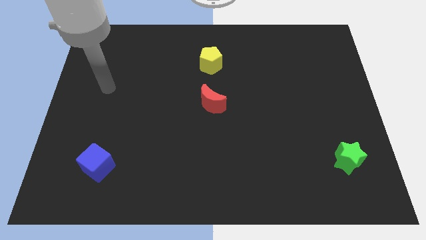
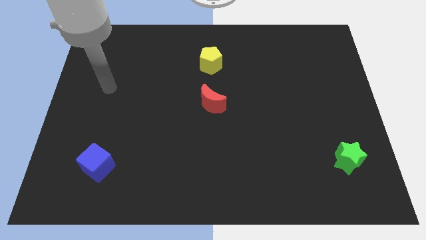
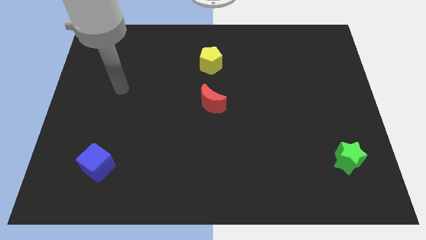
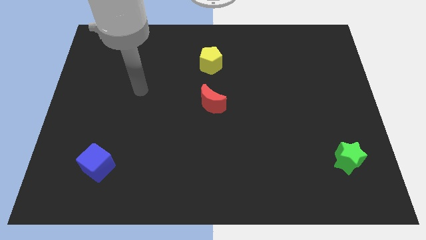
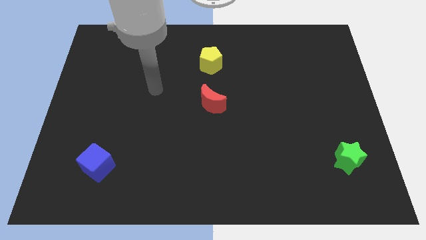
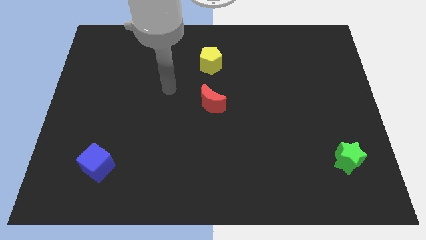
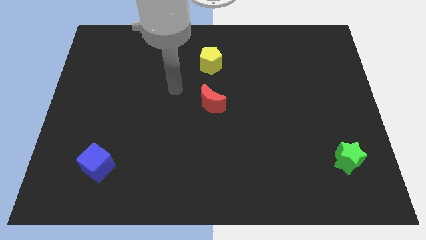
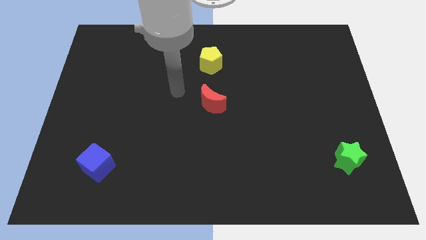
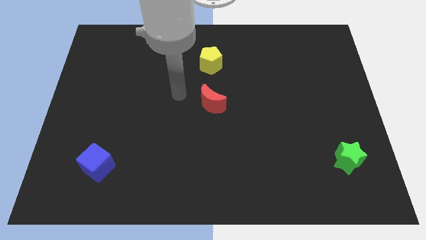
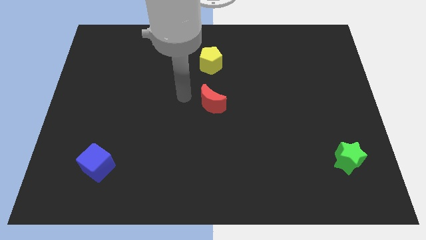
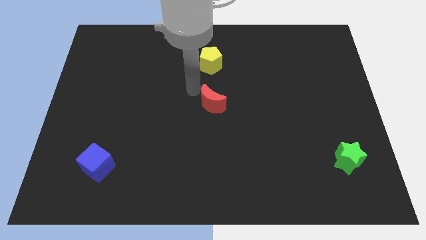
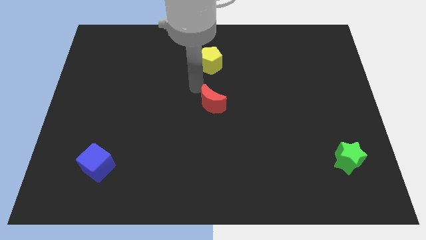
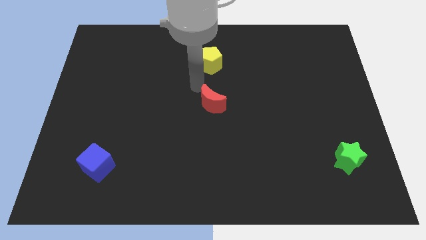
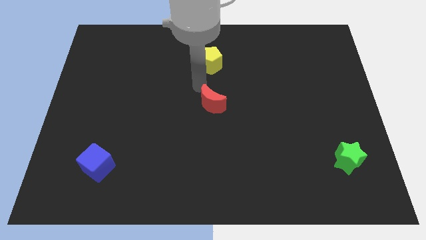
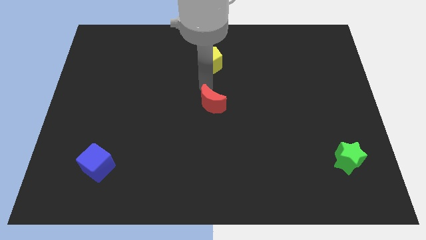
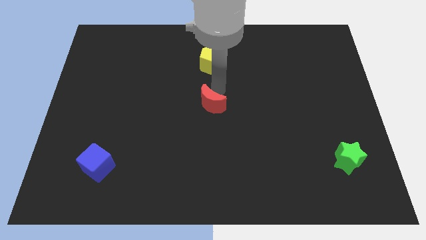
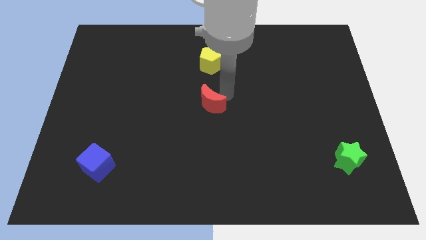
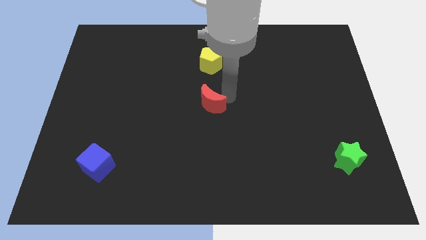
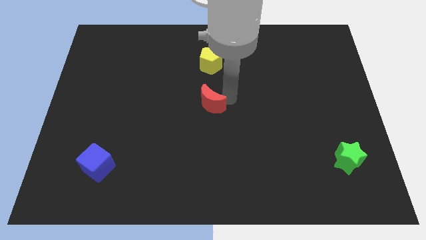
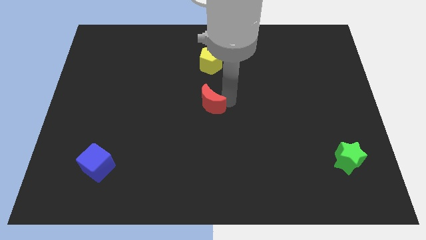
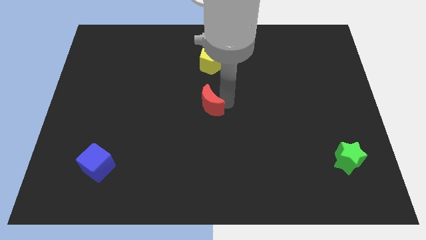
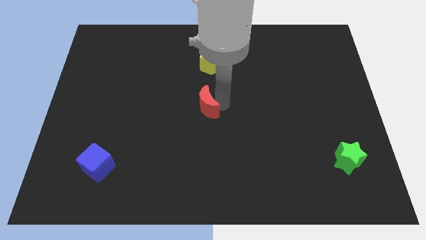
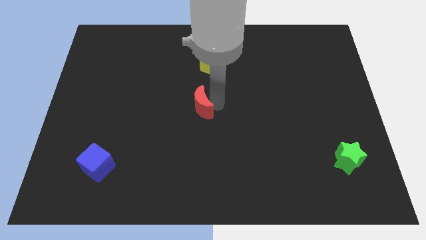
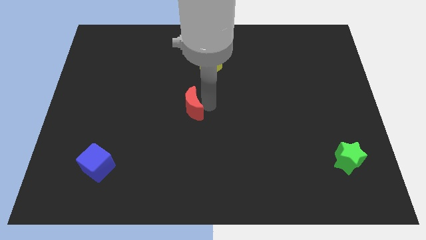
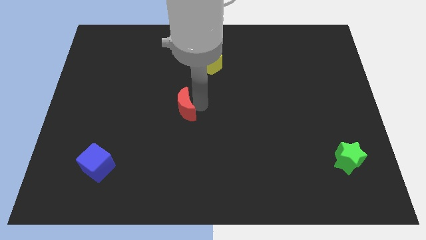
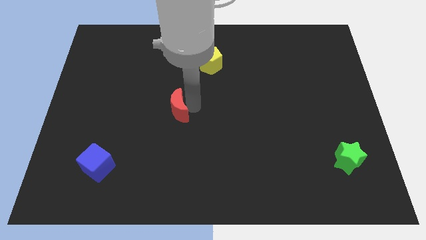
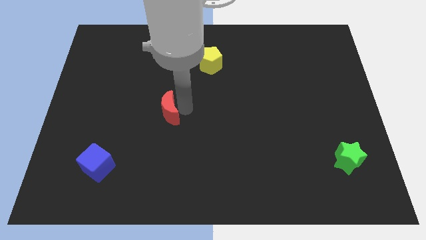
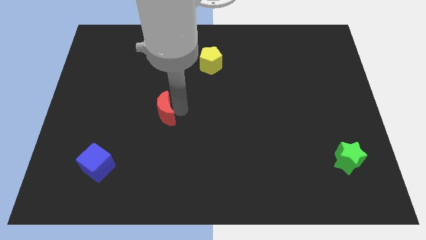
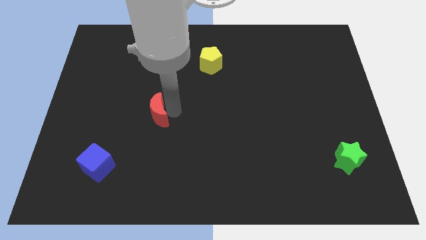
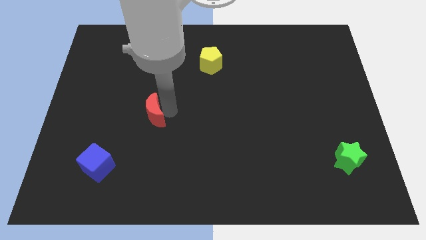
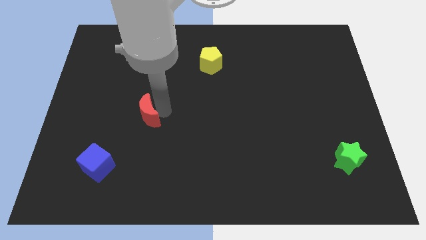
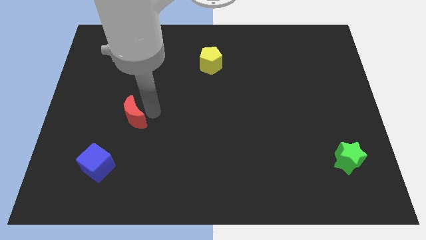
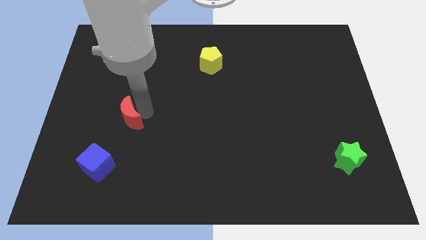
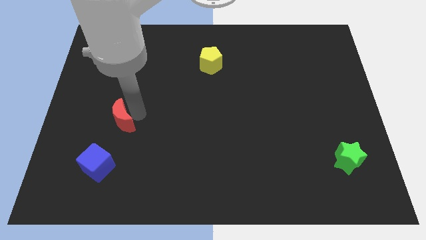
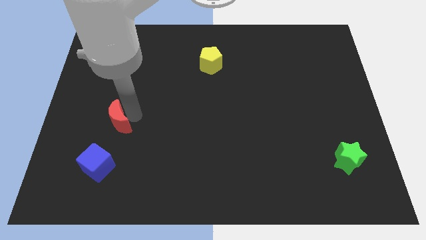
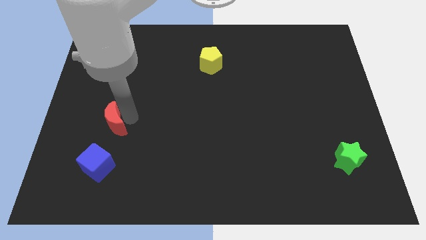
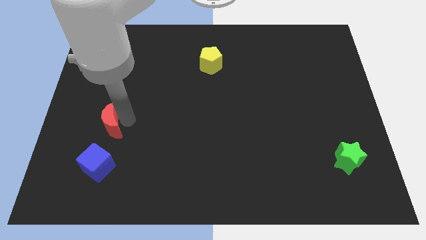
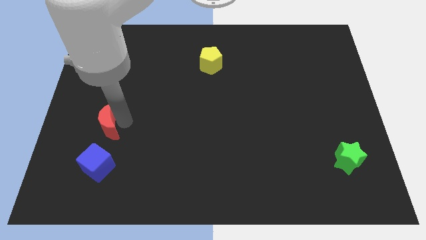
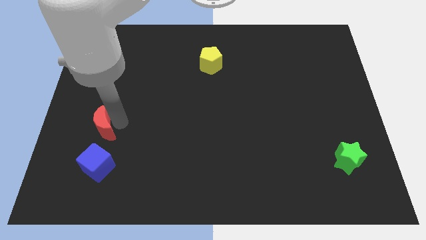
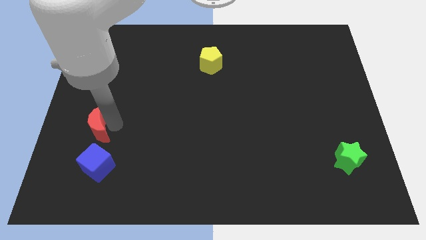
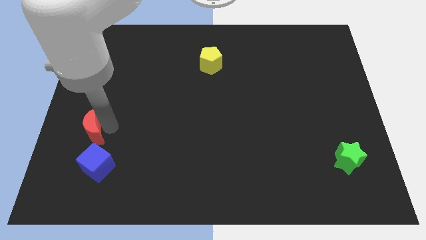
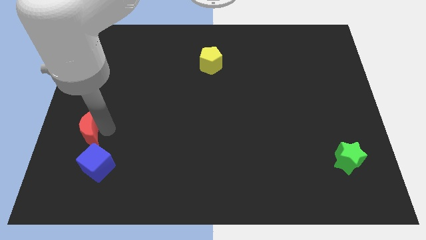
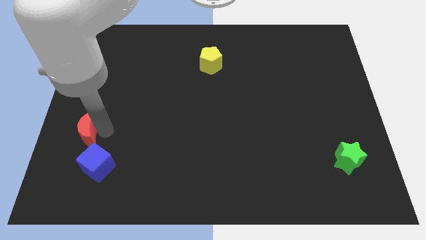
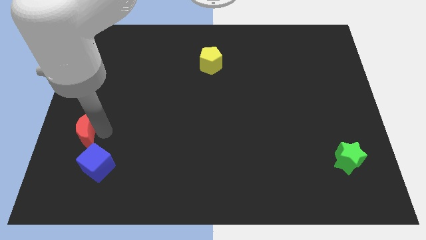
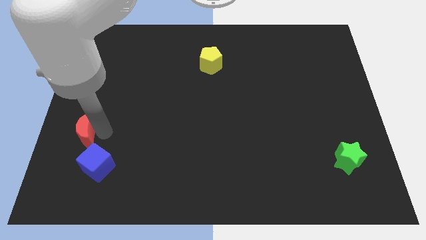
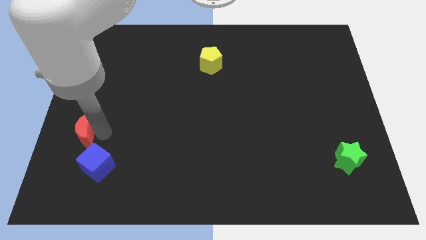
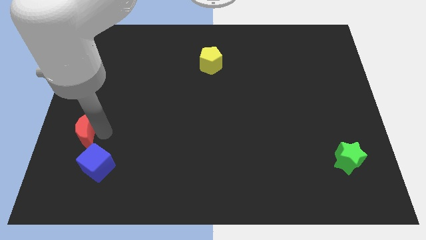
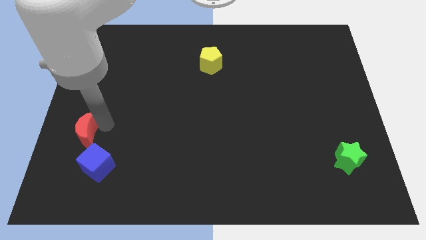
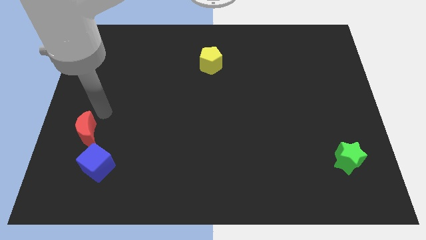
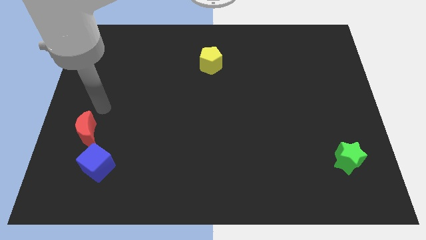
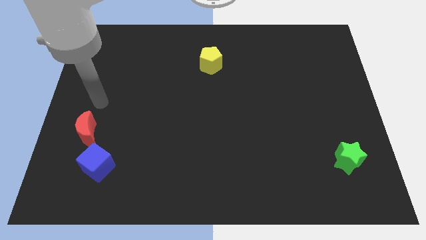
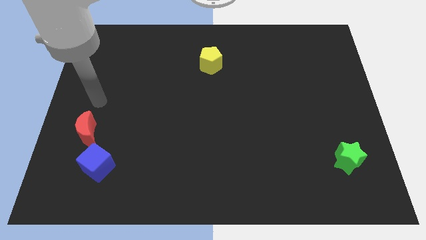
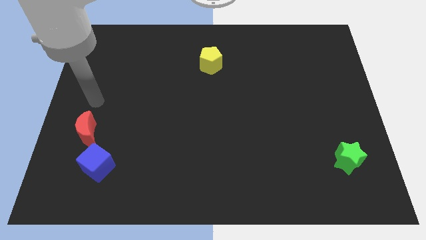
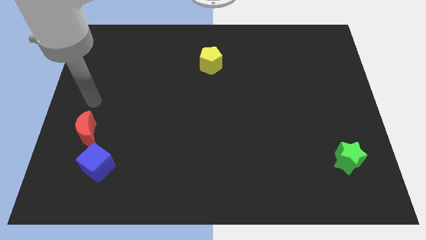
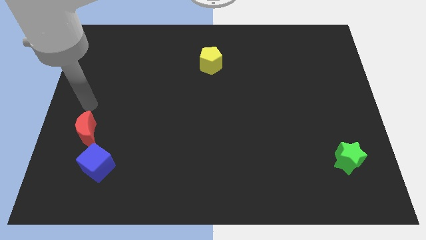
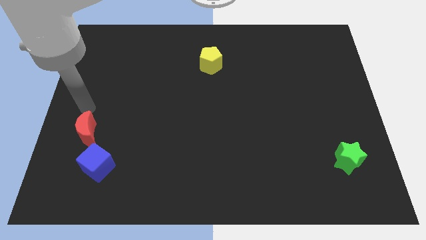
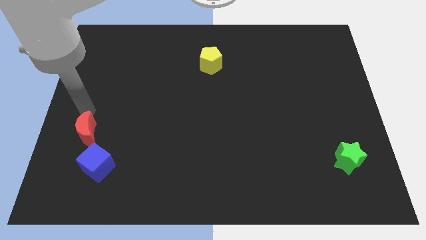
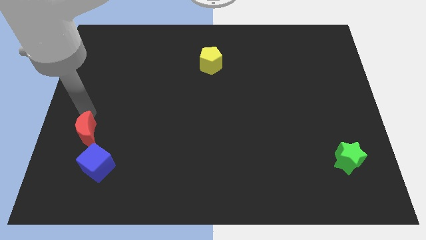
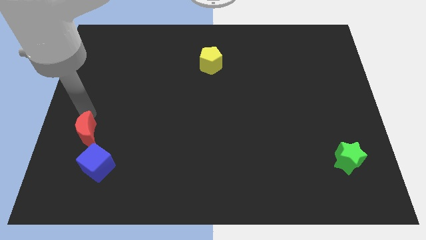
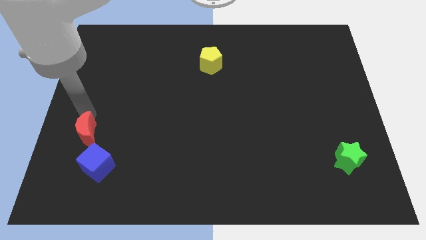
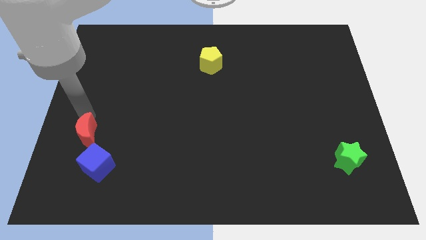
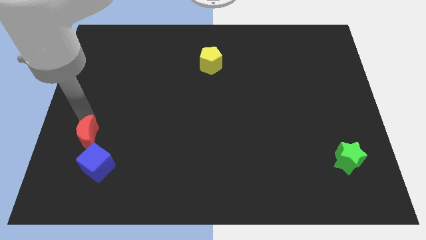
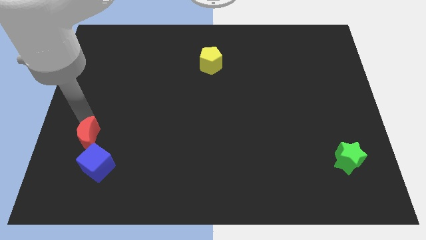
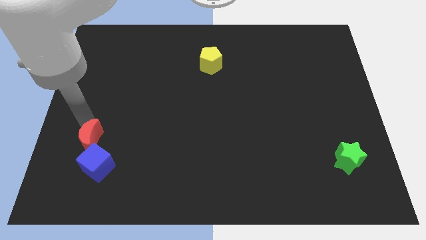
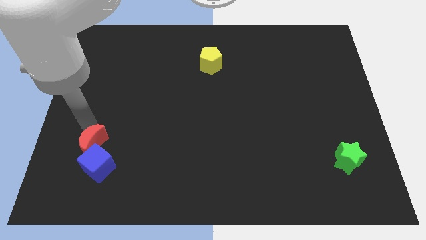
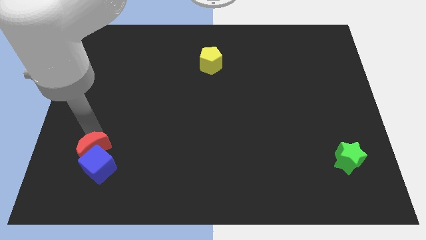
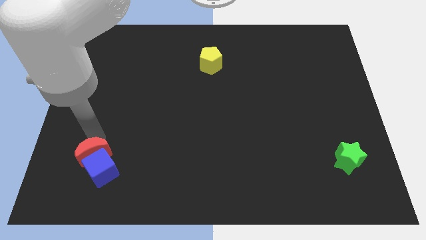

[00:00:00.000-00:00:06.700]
put the red block next to the blue cube

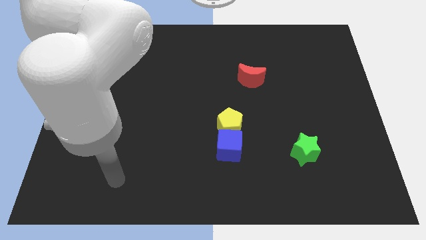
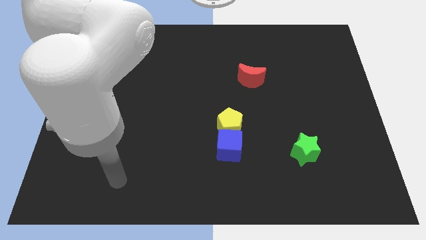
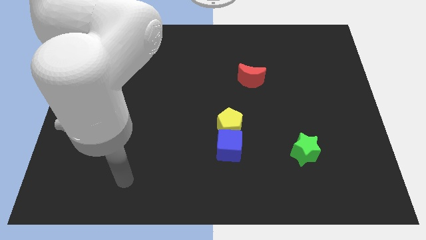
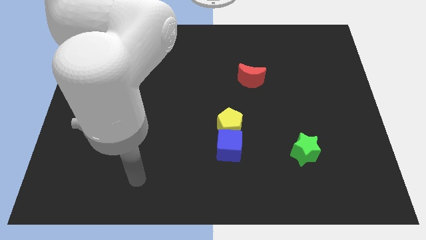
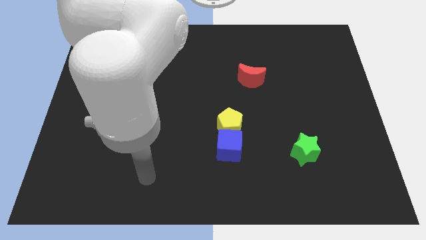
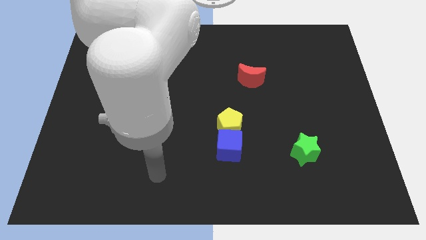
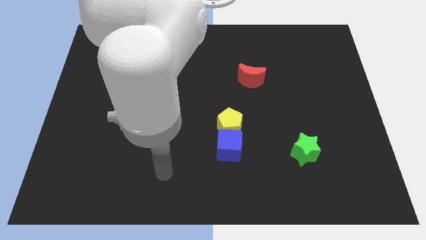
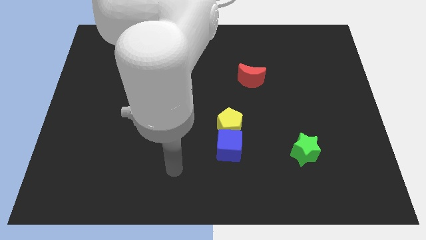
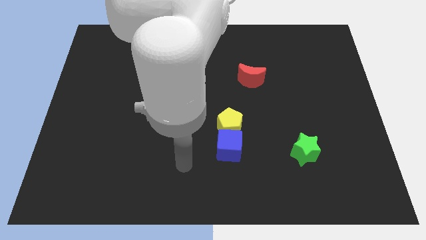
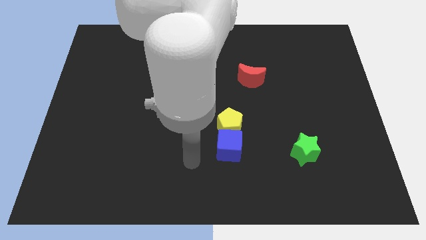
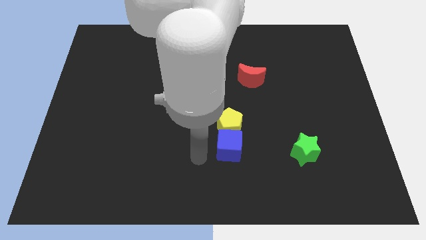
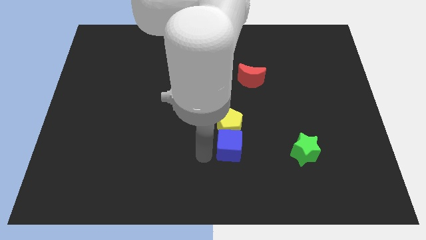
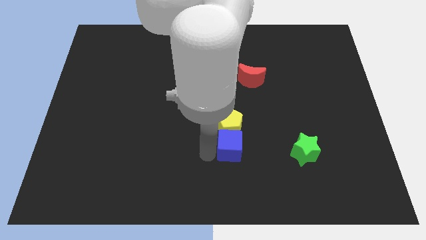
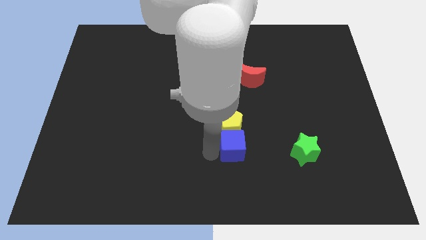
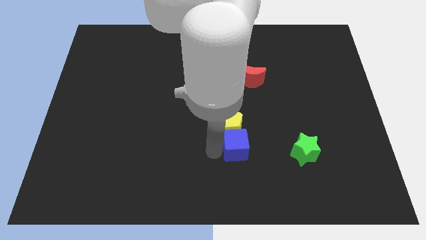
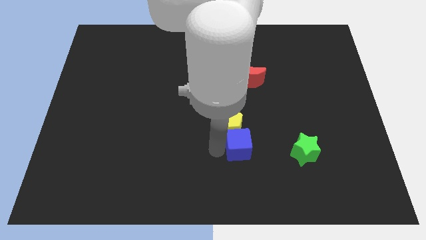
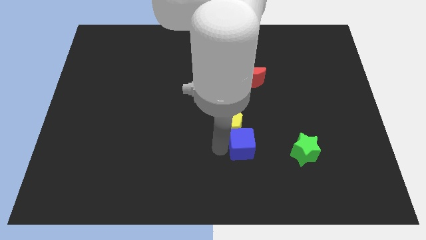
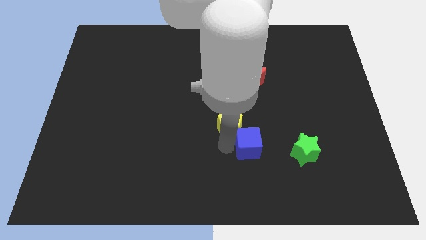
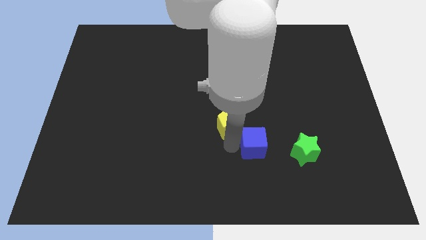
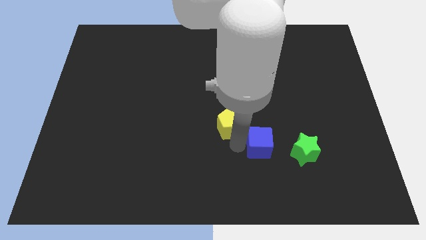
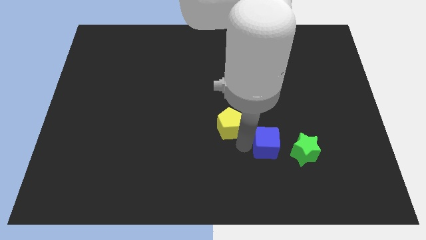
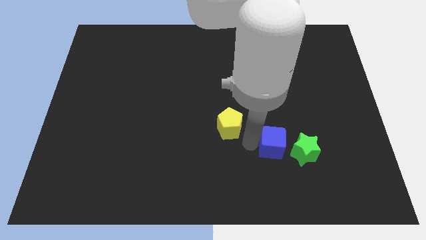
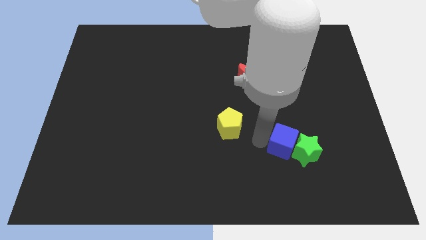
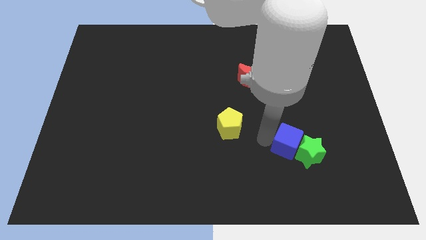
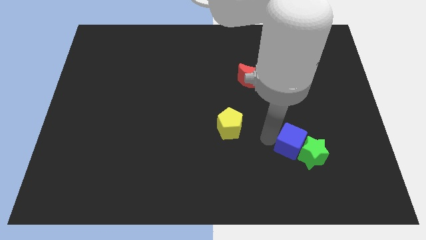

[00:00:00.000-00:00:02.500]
push the cube to the star
